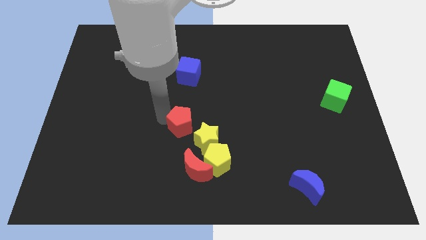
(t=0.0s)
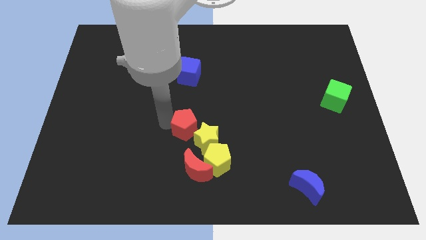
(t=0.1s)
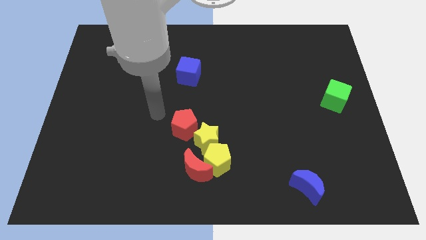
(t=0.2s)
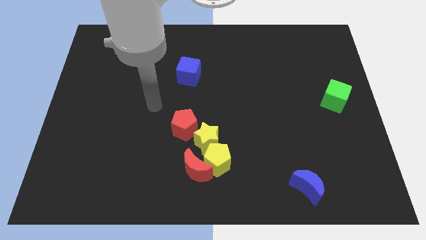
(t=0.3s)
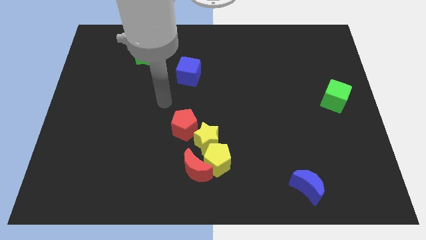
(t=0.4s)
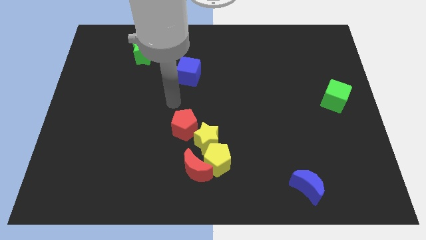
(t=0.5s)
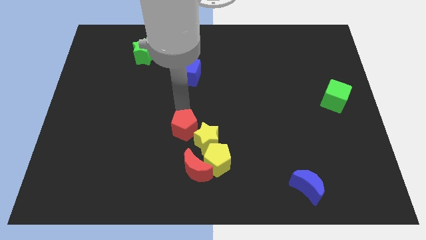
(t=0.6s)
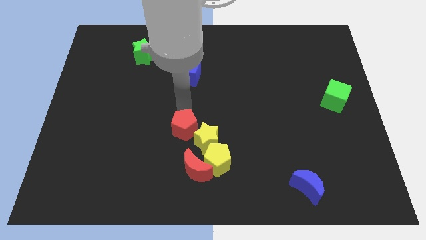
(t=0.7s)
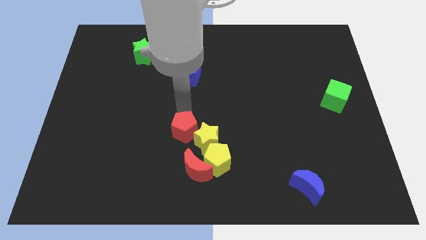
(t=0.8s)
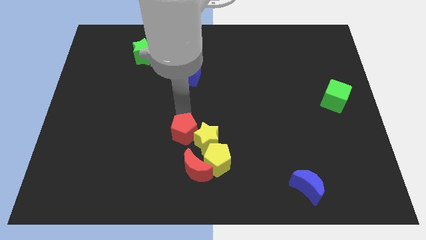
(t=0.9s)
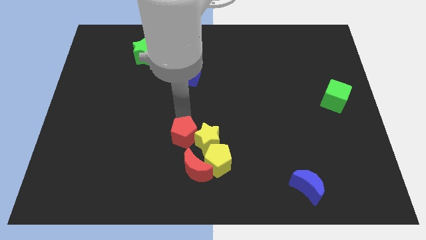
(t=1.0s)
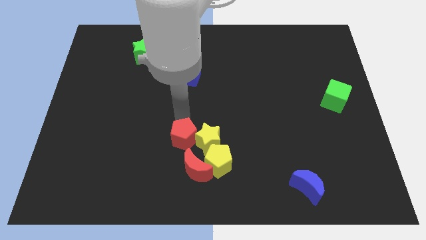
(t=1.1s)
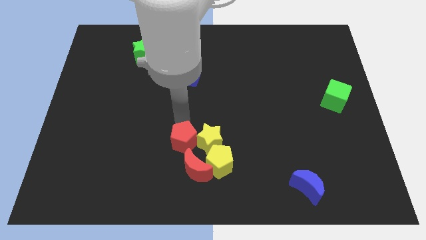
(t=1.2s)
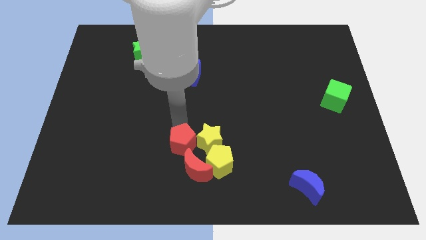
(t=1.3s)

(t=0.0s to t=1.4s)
move the red pentagon to the top of the red crescent

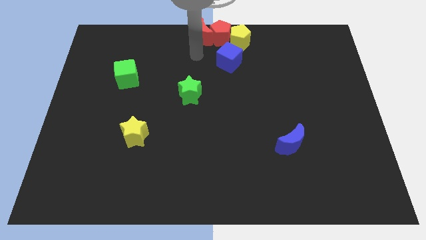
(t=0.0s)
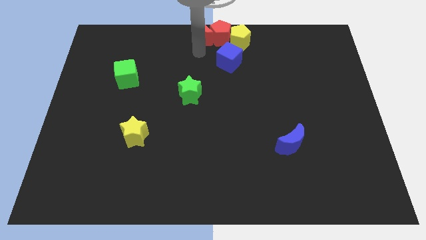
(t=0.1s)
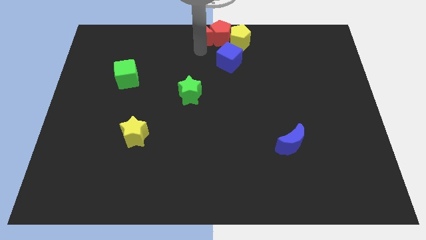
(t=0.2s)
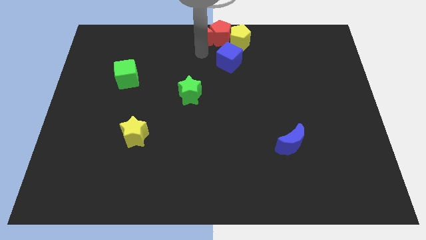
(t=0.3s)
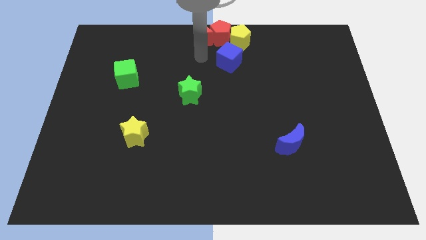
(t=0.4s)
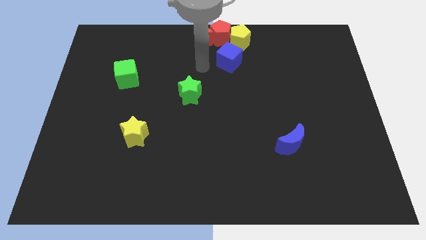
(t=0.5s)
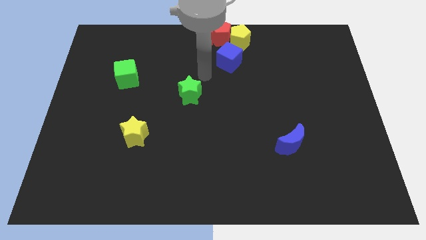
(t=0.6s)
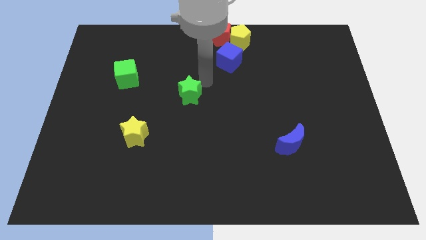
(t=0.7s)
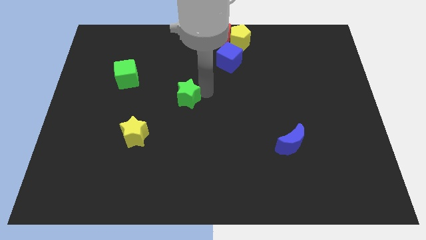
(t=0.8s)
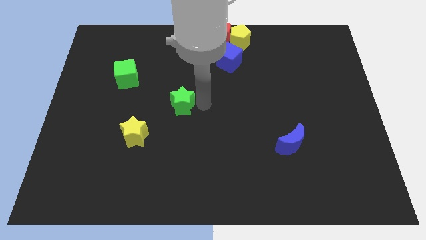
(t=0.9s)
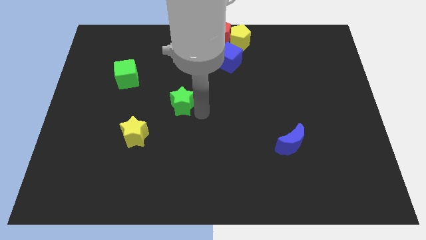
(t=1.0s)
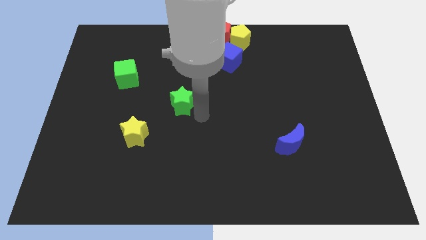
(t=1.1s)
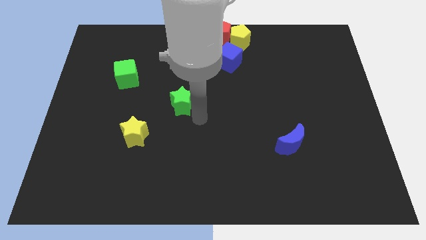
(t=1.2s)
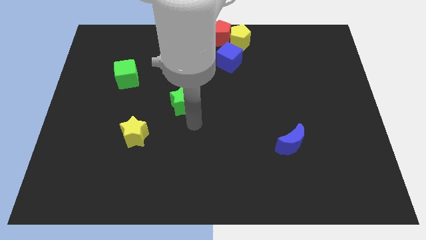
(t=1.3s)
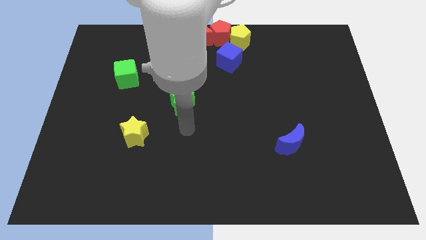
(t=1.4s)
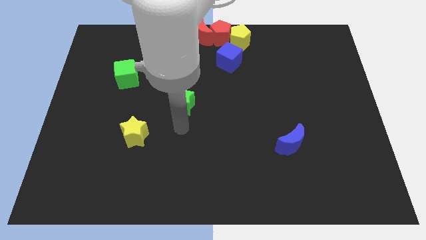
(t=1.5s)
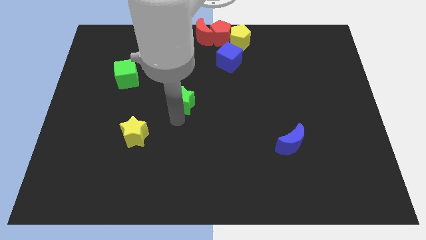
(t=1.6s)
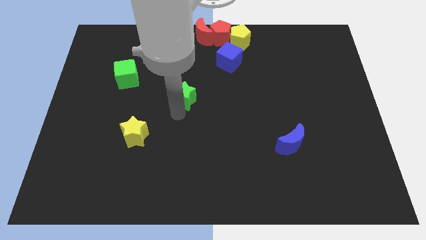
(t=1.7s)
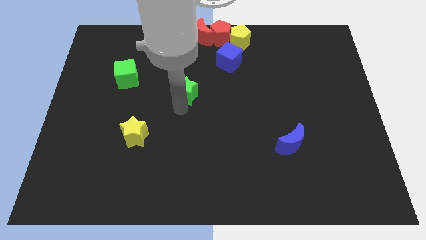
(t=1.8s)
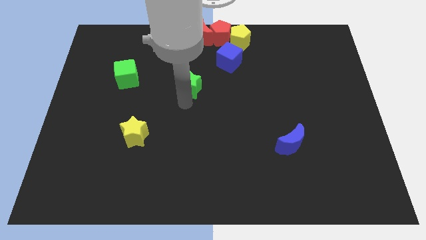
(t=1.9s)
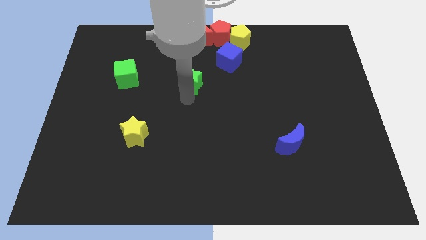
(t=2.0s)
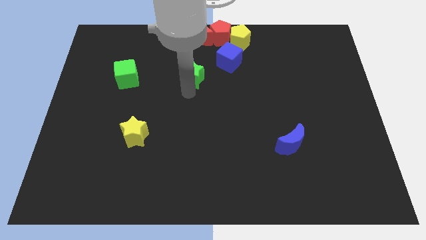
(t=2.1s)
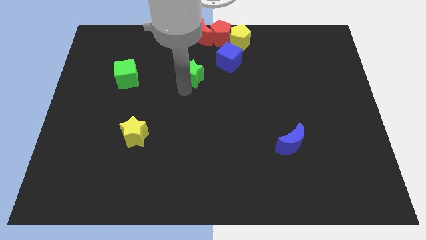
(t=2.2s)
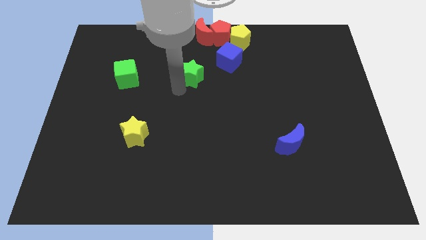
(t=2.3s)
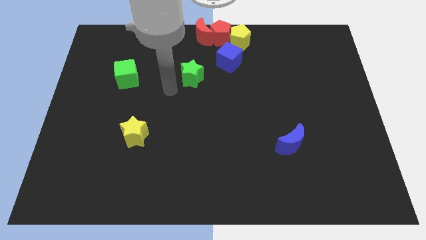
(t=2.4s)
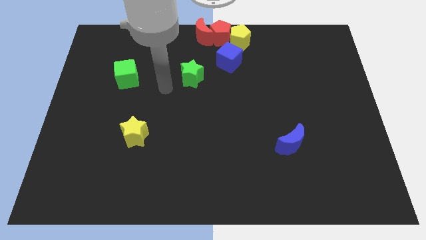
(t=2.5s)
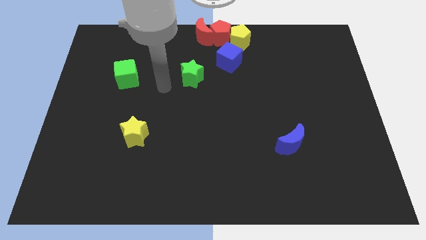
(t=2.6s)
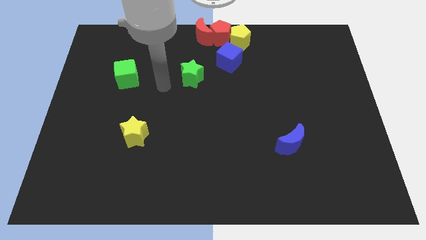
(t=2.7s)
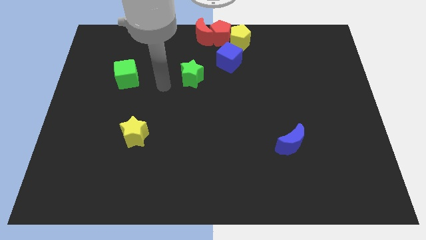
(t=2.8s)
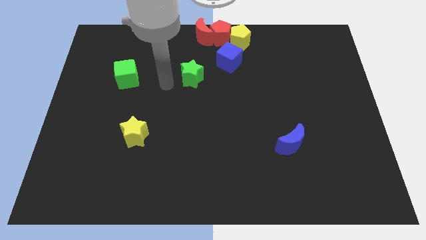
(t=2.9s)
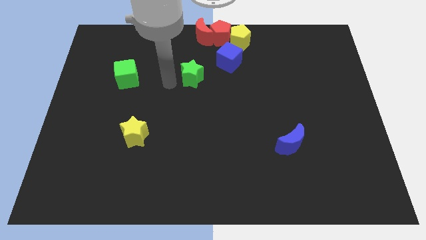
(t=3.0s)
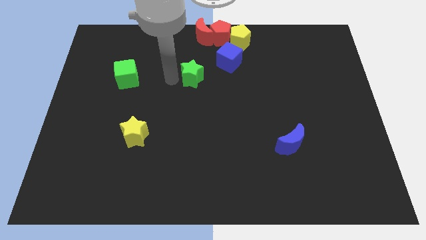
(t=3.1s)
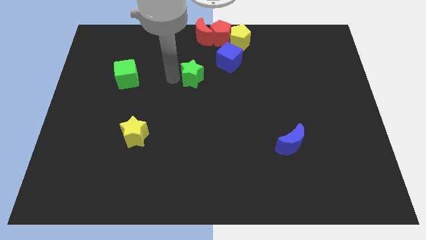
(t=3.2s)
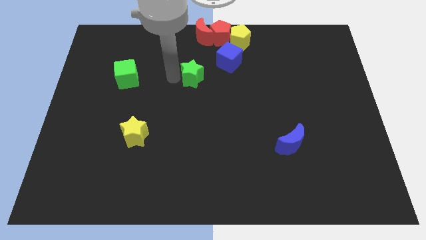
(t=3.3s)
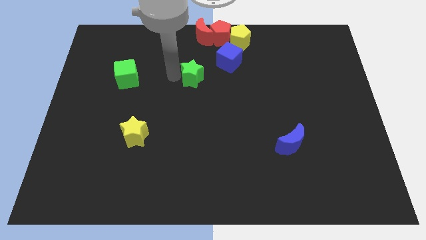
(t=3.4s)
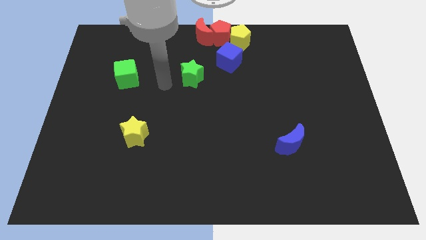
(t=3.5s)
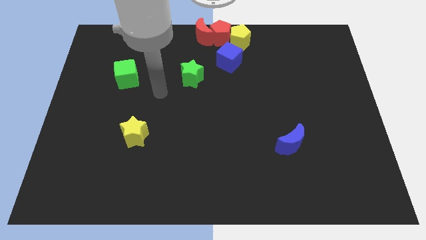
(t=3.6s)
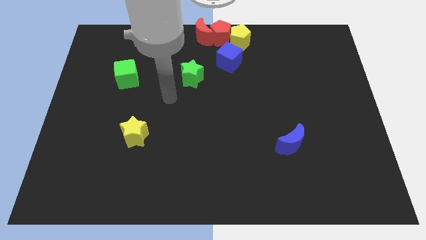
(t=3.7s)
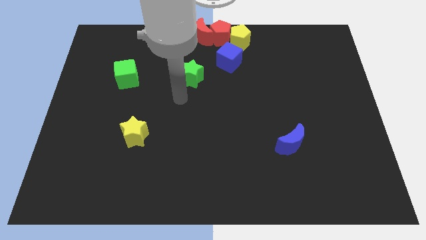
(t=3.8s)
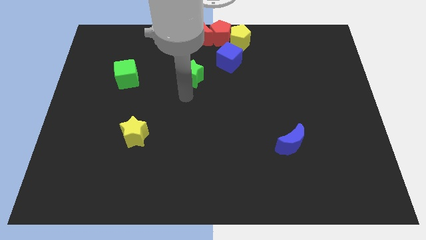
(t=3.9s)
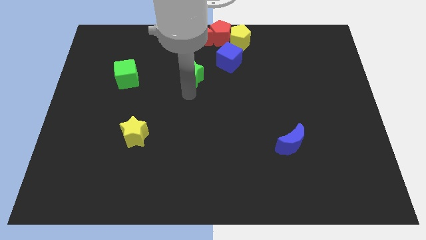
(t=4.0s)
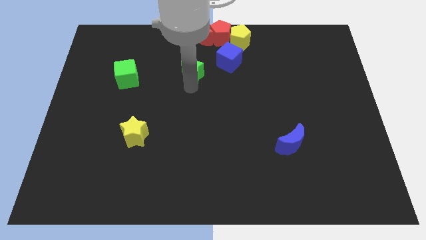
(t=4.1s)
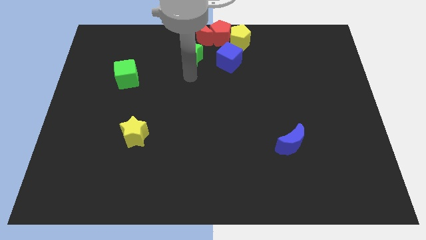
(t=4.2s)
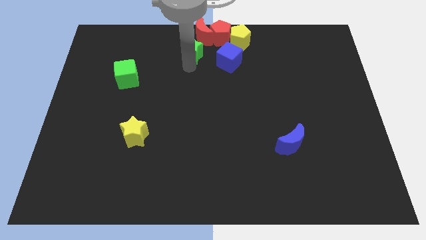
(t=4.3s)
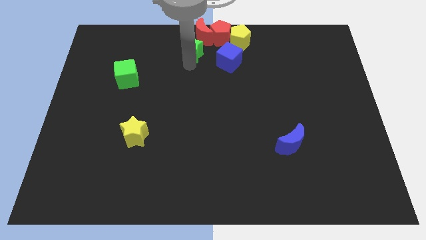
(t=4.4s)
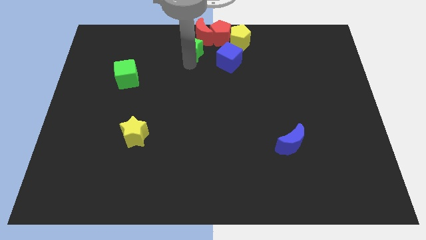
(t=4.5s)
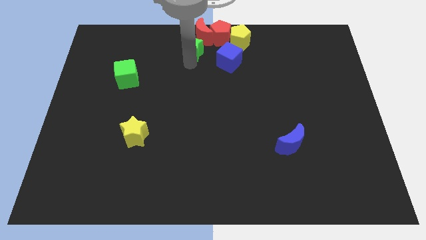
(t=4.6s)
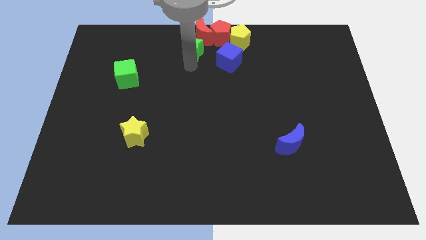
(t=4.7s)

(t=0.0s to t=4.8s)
put the green star parallel left to the blue cube

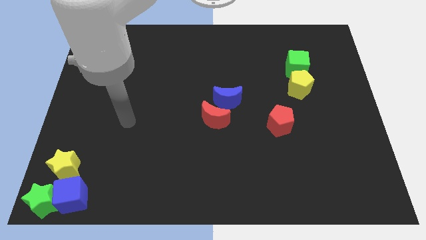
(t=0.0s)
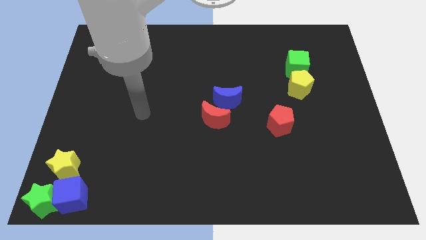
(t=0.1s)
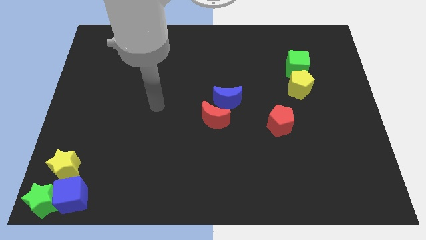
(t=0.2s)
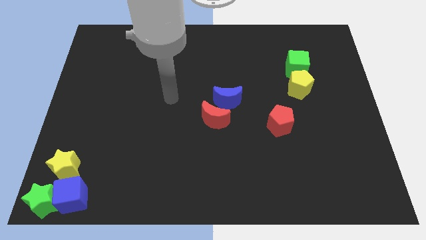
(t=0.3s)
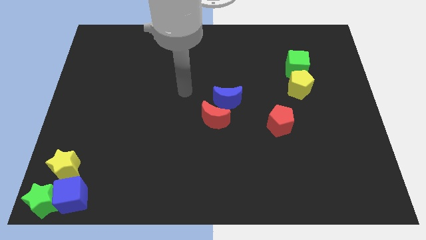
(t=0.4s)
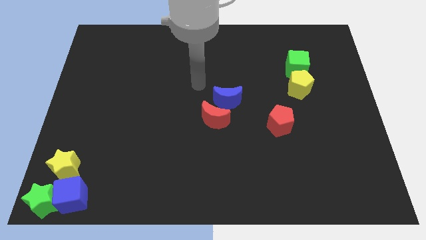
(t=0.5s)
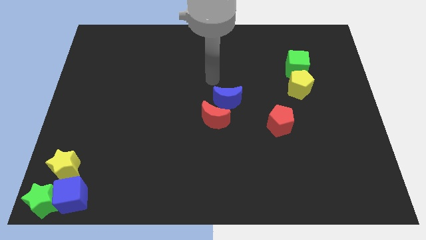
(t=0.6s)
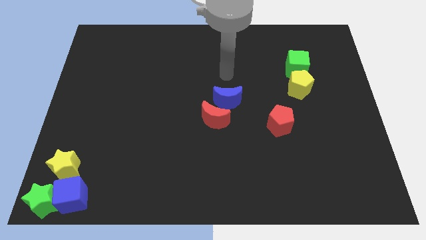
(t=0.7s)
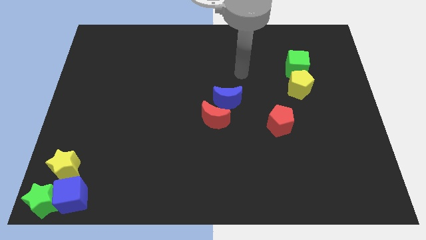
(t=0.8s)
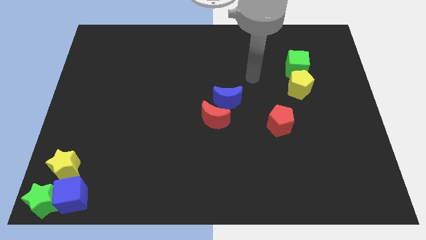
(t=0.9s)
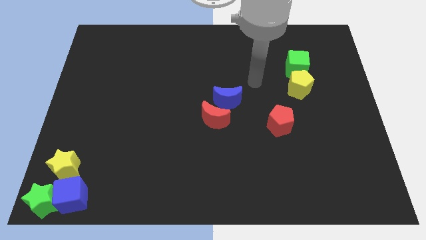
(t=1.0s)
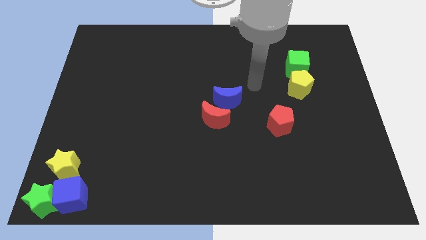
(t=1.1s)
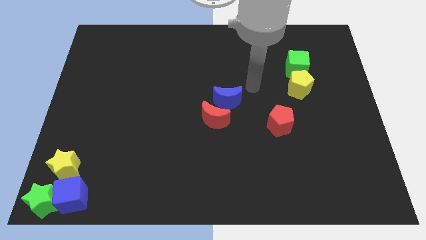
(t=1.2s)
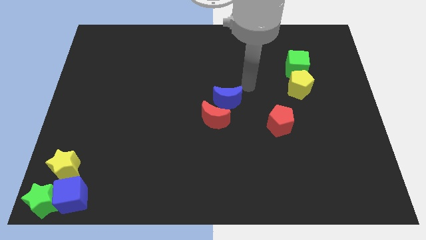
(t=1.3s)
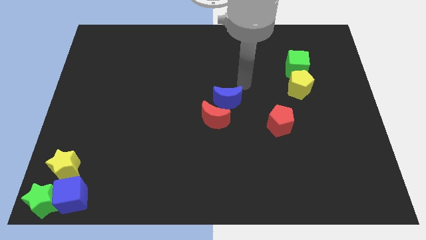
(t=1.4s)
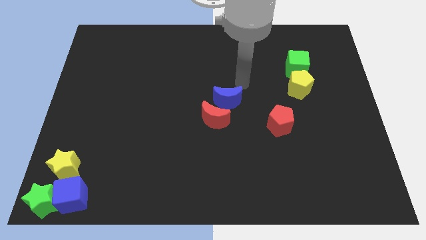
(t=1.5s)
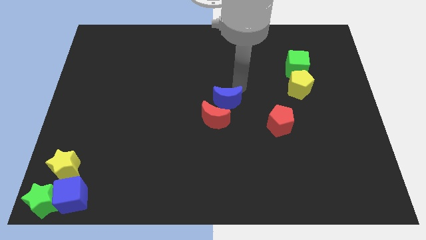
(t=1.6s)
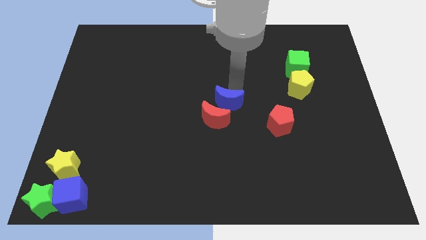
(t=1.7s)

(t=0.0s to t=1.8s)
point your arm above blue moon

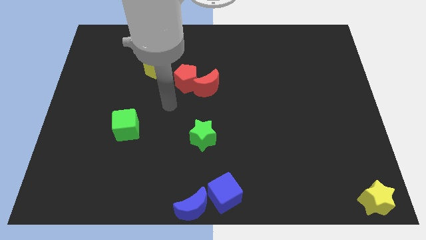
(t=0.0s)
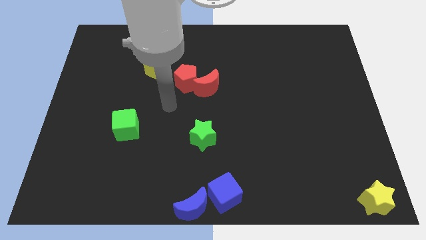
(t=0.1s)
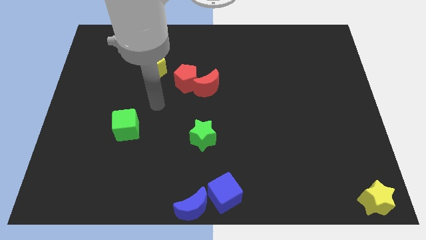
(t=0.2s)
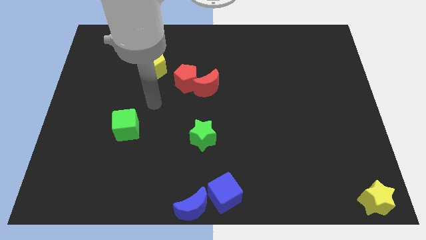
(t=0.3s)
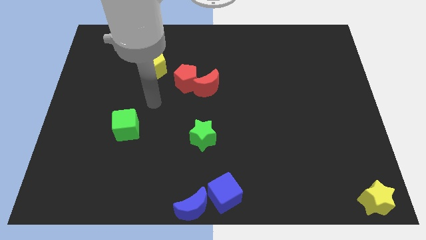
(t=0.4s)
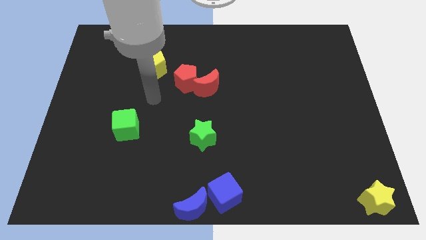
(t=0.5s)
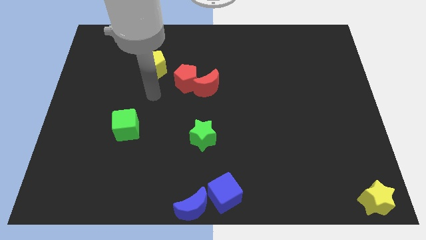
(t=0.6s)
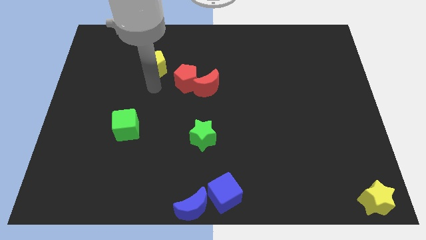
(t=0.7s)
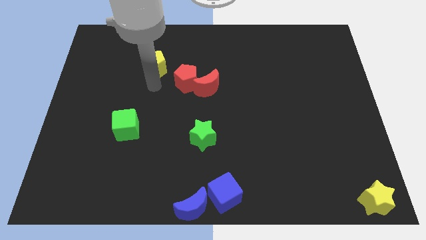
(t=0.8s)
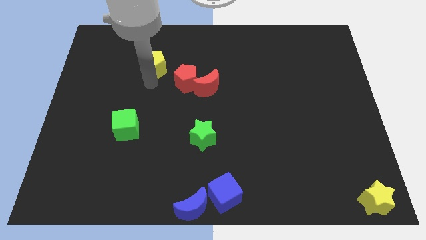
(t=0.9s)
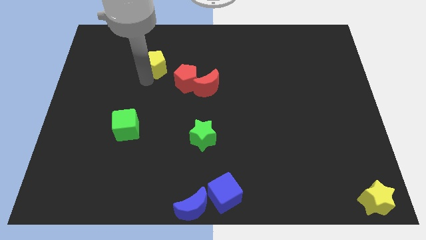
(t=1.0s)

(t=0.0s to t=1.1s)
point your arm below yellow pentagon
